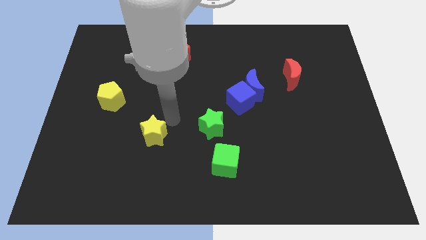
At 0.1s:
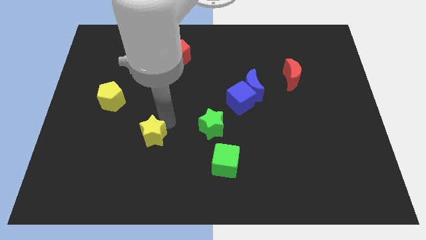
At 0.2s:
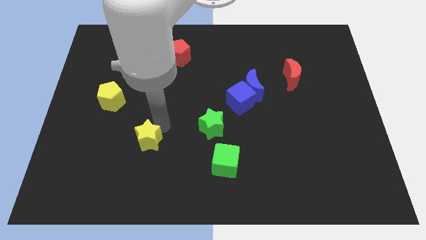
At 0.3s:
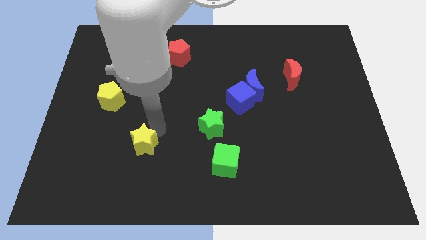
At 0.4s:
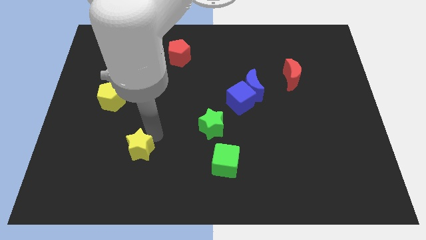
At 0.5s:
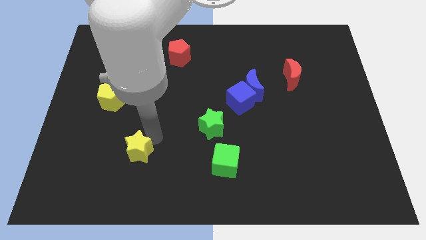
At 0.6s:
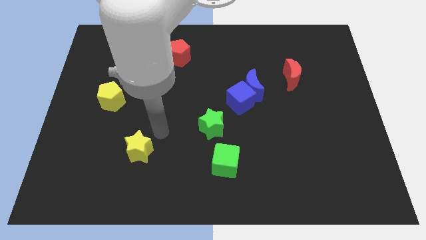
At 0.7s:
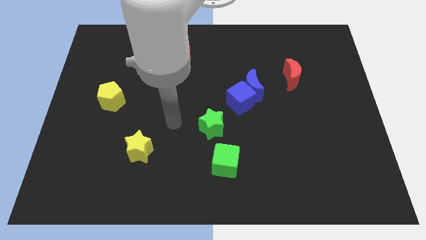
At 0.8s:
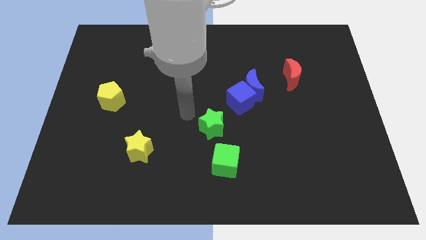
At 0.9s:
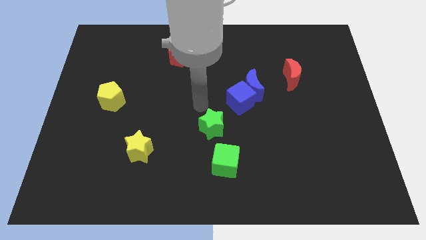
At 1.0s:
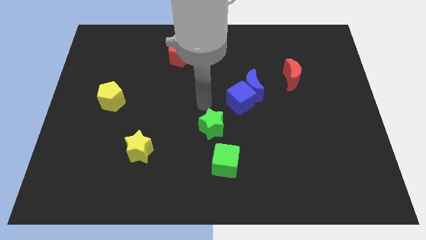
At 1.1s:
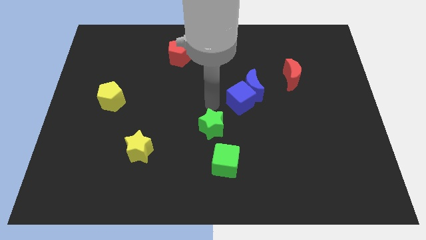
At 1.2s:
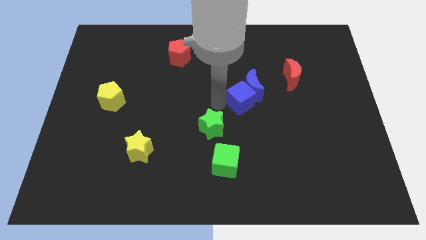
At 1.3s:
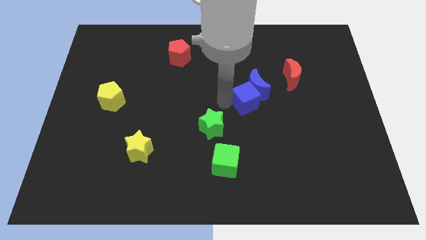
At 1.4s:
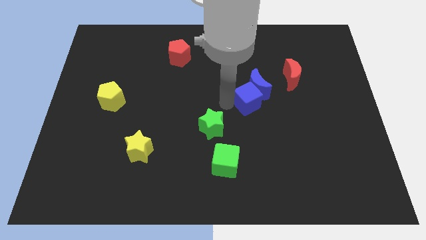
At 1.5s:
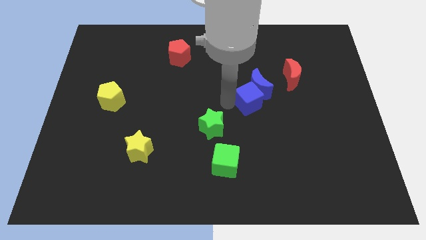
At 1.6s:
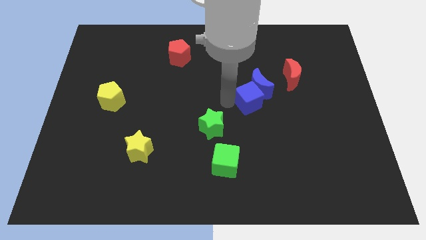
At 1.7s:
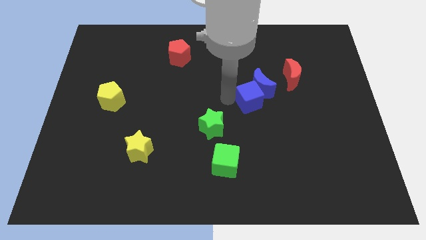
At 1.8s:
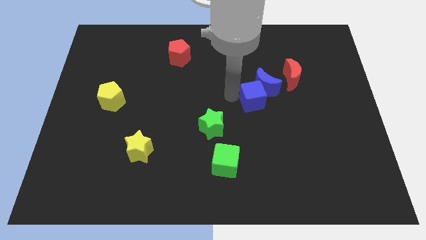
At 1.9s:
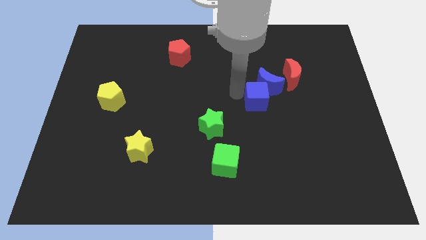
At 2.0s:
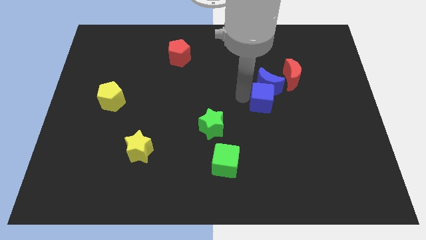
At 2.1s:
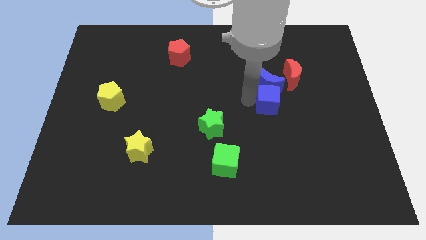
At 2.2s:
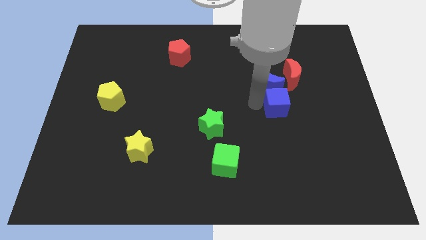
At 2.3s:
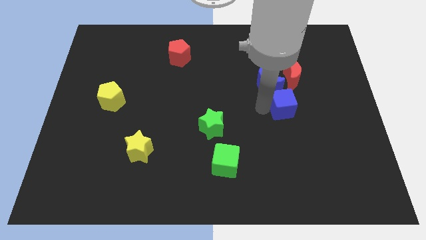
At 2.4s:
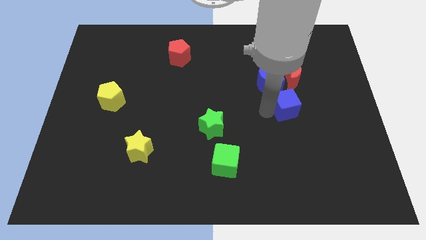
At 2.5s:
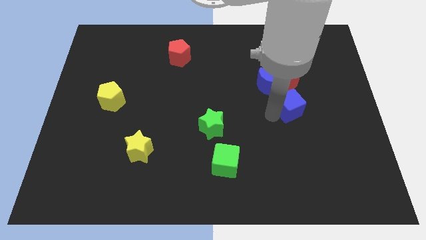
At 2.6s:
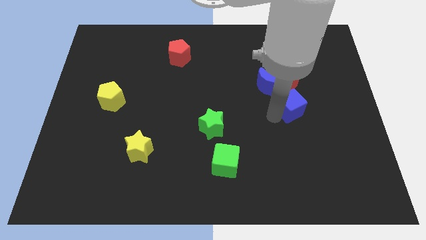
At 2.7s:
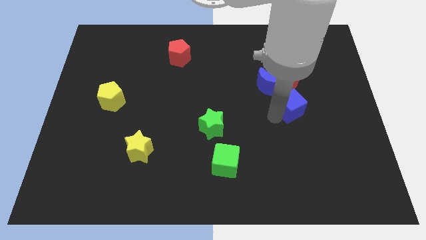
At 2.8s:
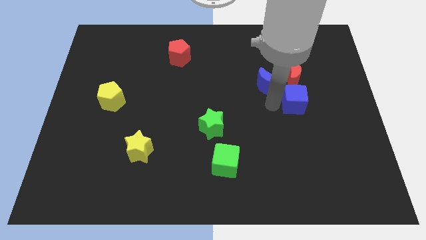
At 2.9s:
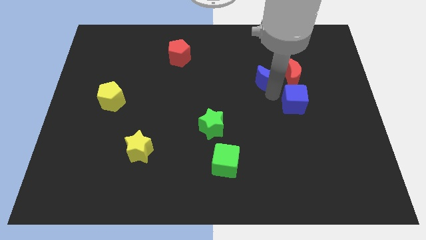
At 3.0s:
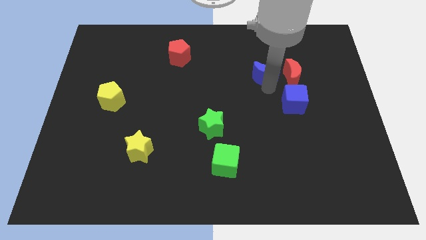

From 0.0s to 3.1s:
place the blue cube vertically at the bottom of the red moon

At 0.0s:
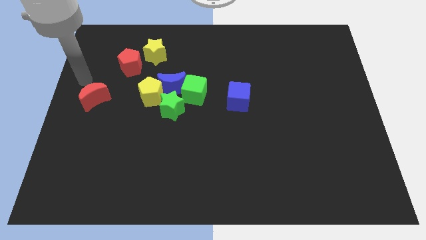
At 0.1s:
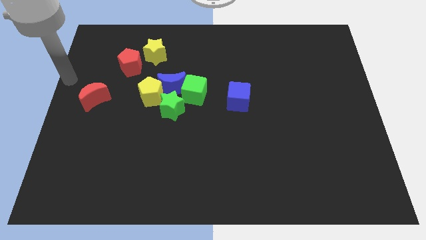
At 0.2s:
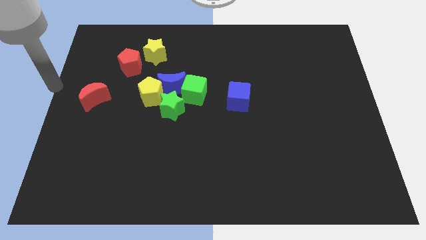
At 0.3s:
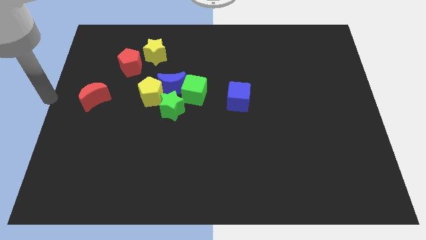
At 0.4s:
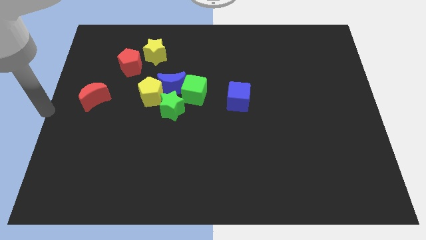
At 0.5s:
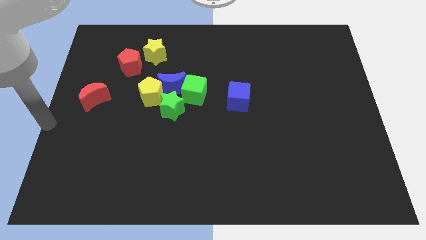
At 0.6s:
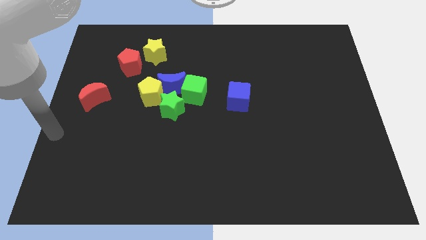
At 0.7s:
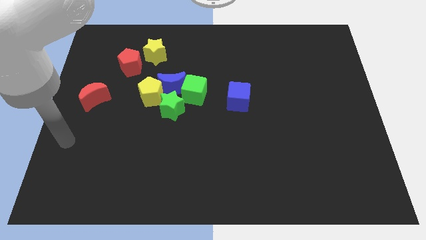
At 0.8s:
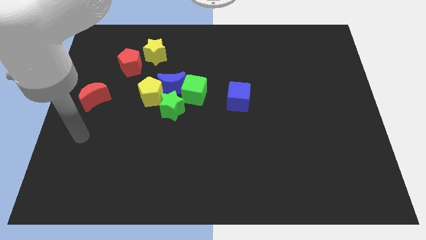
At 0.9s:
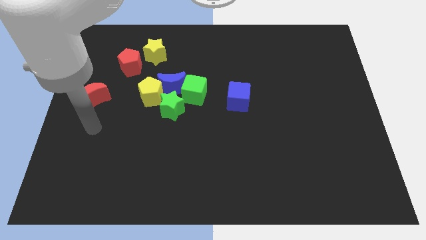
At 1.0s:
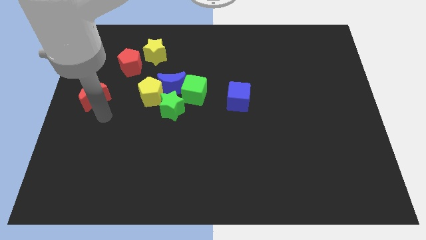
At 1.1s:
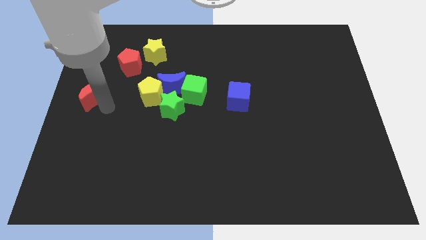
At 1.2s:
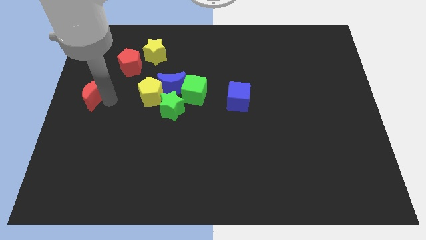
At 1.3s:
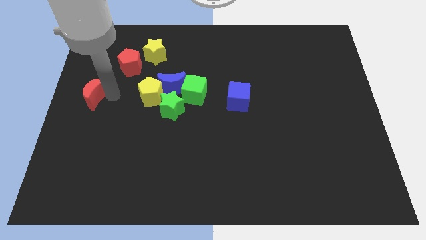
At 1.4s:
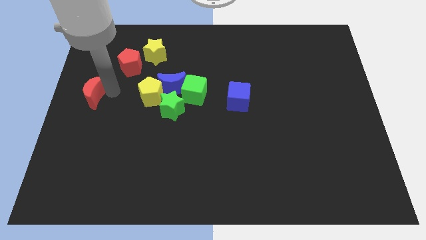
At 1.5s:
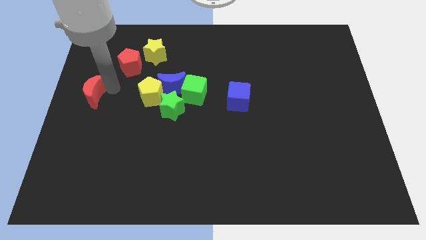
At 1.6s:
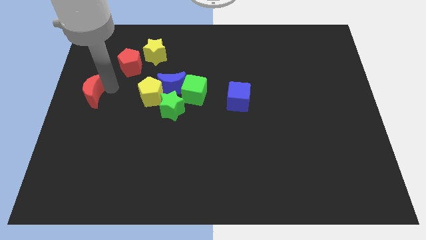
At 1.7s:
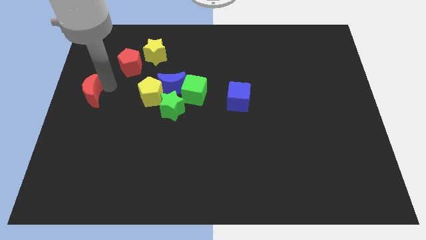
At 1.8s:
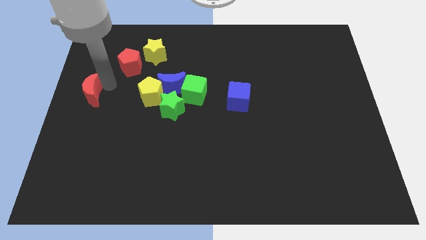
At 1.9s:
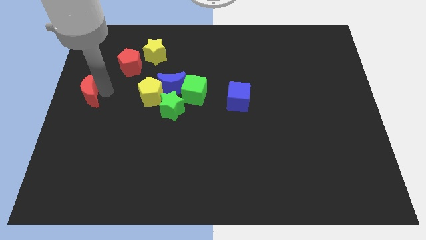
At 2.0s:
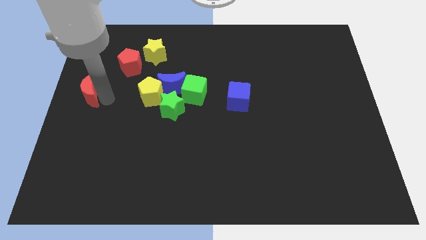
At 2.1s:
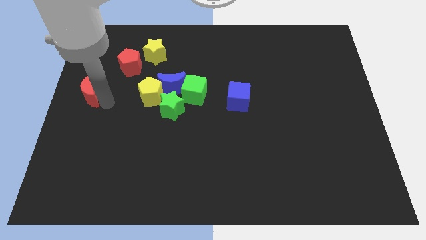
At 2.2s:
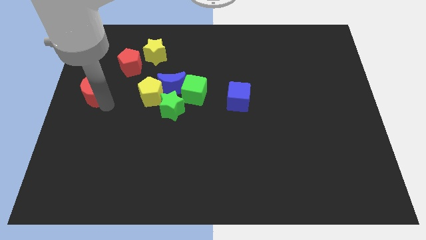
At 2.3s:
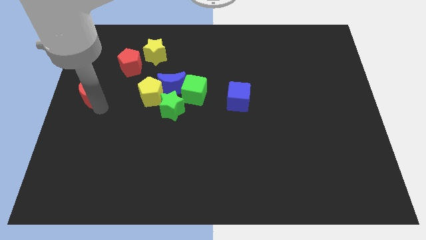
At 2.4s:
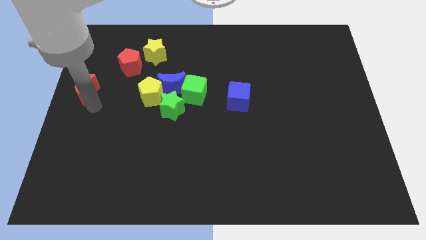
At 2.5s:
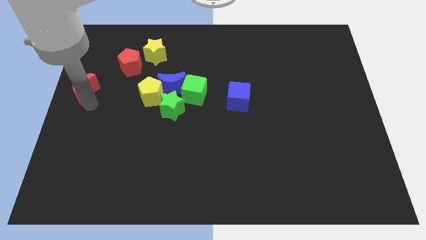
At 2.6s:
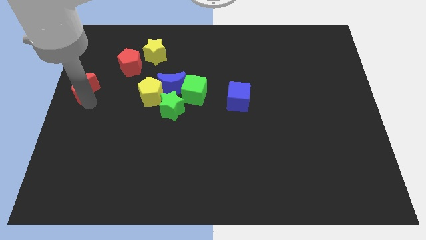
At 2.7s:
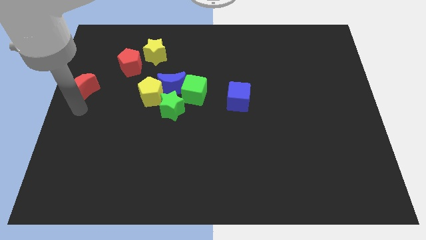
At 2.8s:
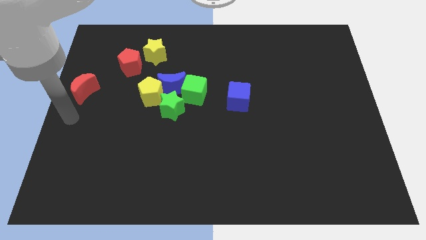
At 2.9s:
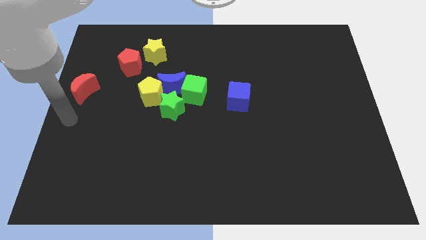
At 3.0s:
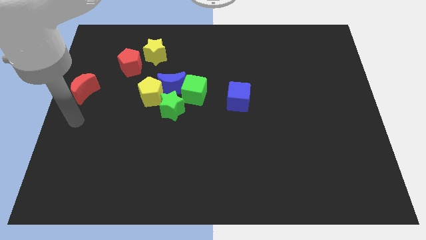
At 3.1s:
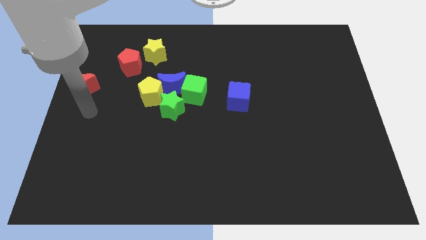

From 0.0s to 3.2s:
move red crescent towards left side

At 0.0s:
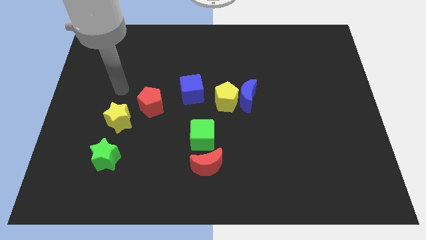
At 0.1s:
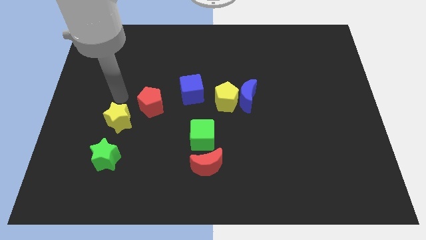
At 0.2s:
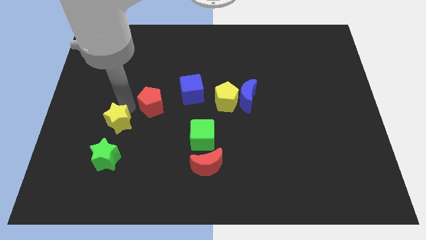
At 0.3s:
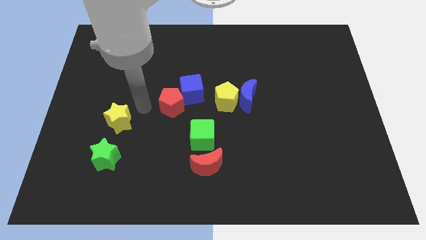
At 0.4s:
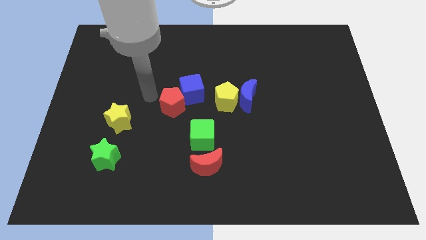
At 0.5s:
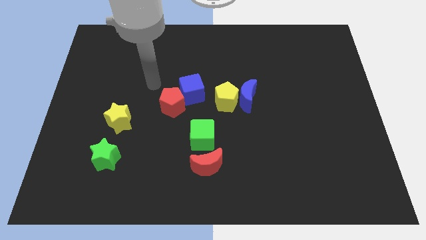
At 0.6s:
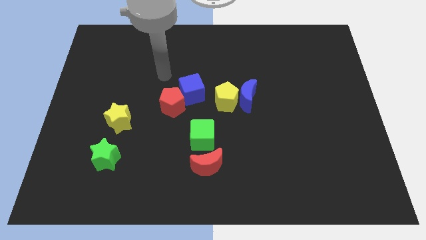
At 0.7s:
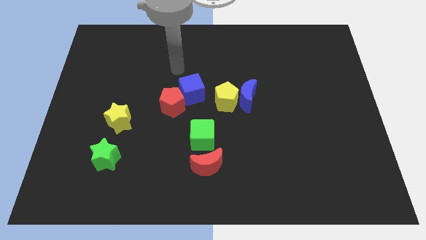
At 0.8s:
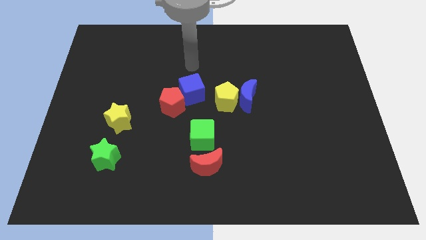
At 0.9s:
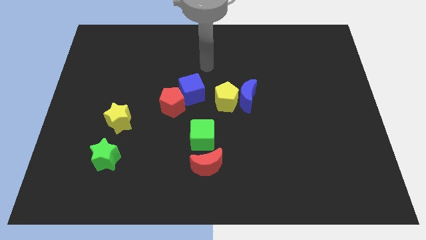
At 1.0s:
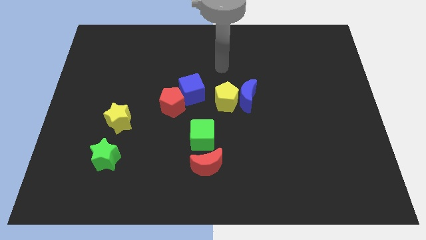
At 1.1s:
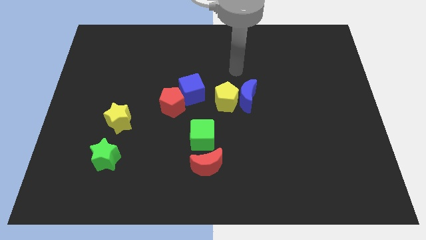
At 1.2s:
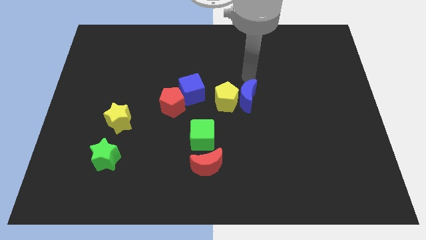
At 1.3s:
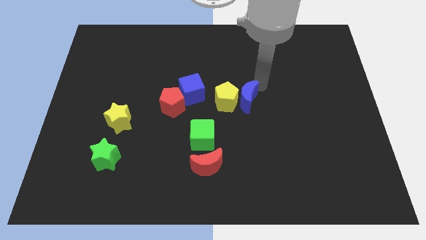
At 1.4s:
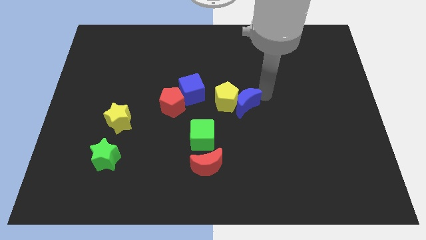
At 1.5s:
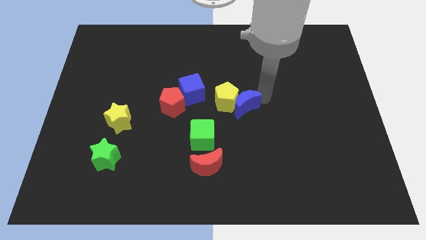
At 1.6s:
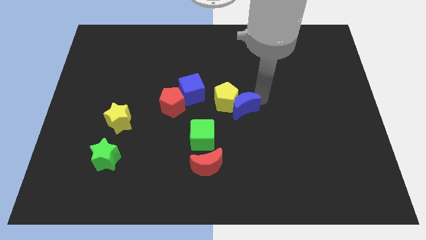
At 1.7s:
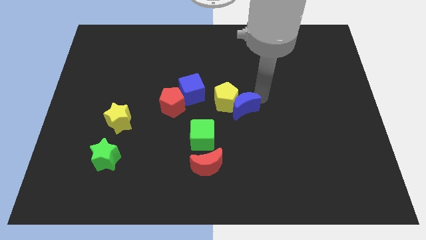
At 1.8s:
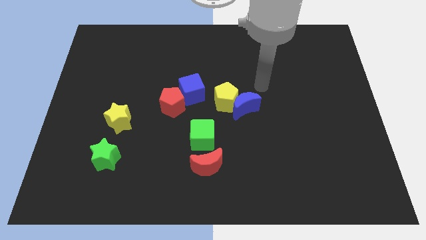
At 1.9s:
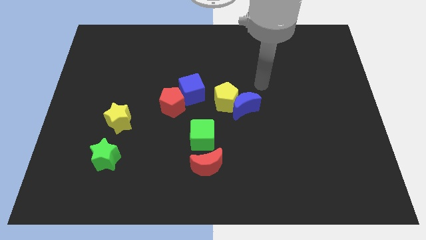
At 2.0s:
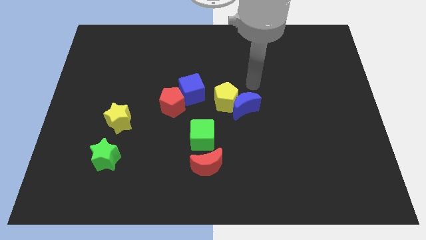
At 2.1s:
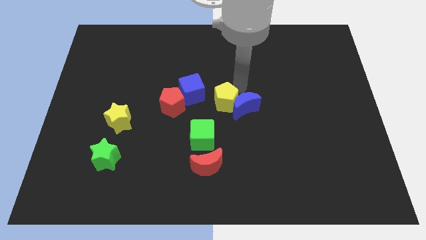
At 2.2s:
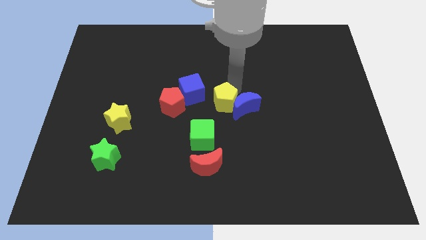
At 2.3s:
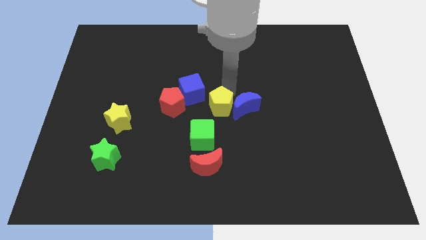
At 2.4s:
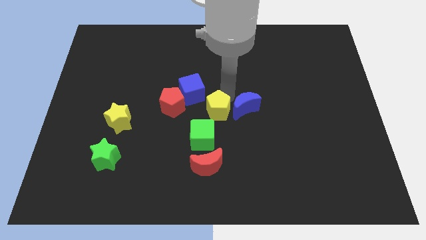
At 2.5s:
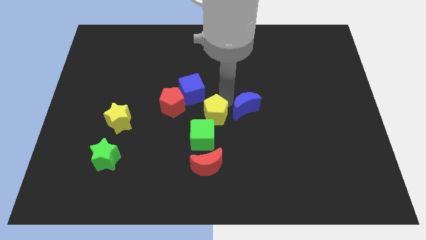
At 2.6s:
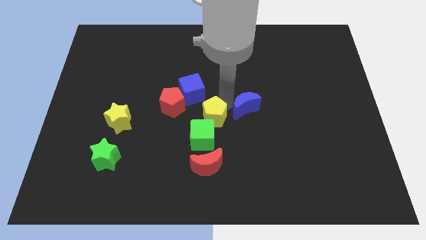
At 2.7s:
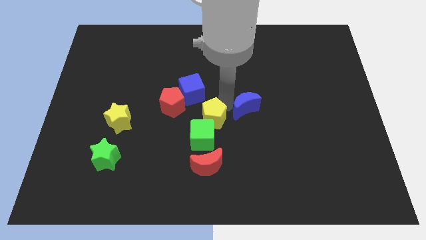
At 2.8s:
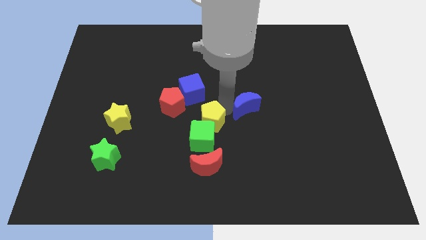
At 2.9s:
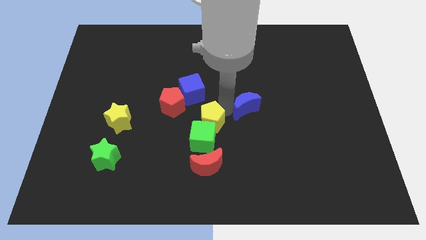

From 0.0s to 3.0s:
push the yellow pentagon into the green cube
